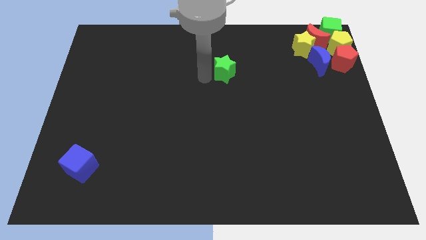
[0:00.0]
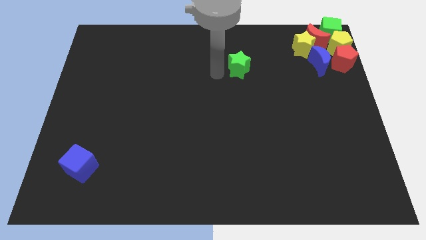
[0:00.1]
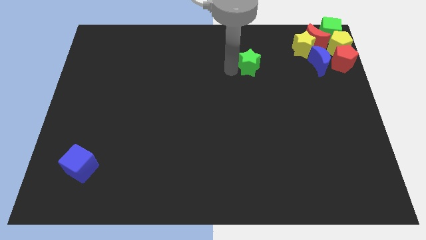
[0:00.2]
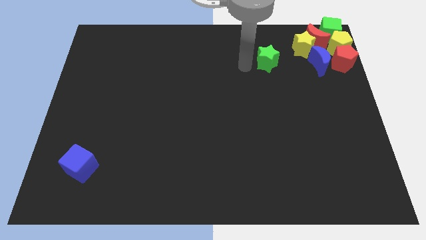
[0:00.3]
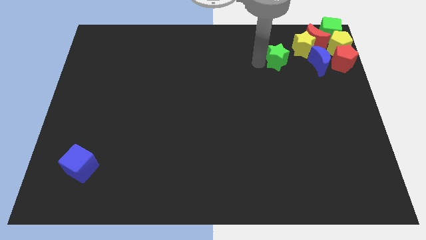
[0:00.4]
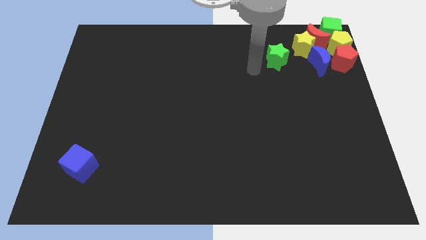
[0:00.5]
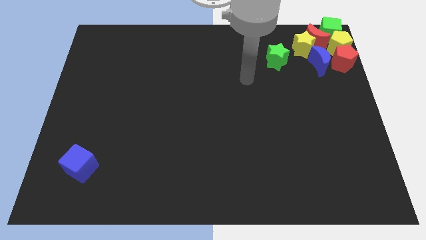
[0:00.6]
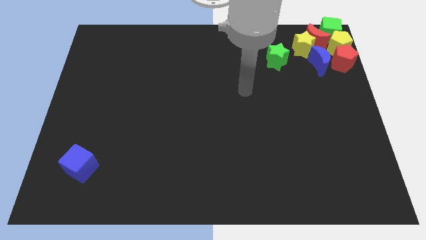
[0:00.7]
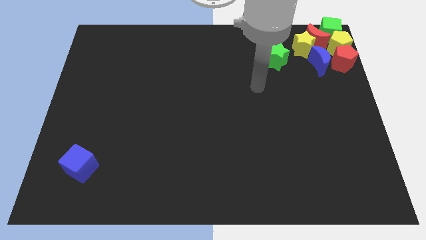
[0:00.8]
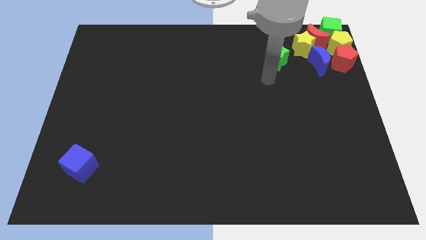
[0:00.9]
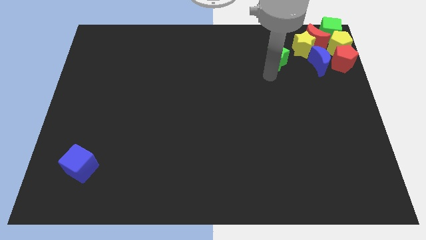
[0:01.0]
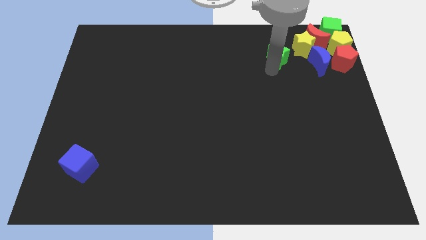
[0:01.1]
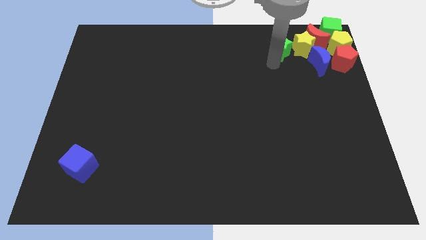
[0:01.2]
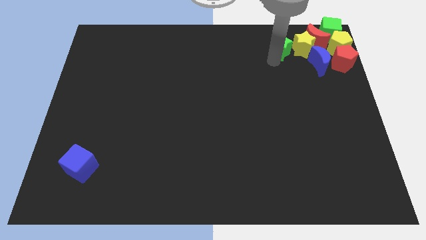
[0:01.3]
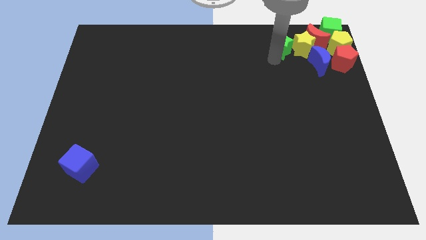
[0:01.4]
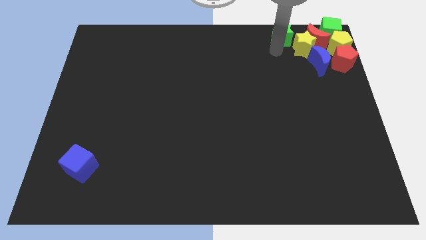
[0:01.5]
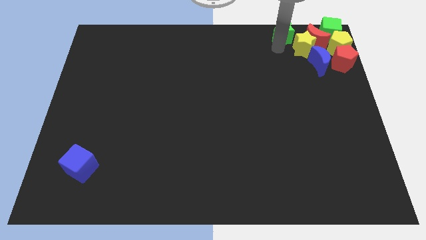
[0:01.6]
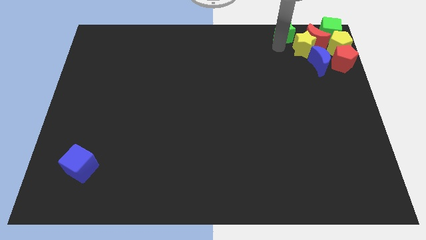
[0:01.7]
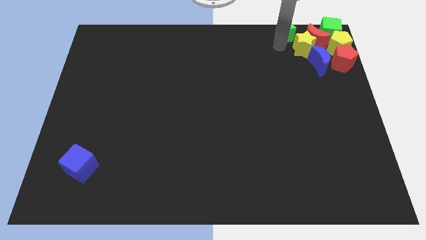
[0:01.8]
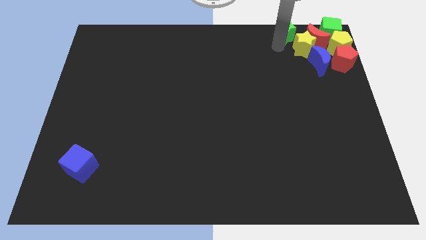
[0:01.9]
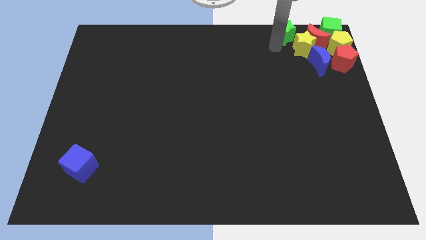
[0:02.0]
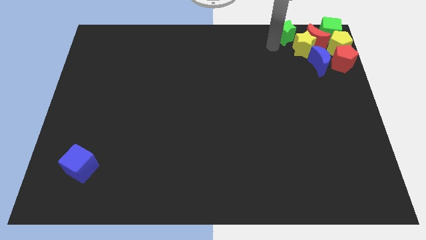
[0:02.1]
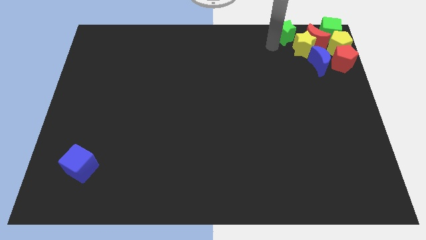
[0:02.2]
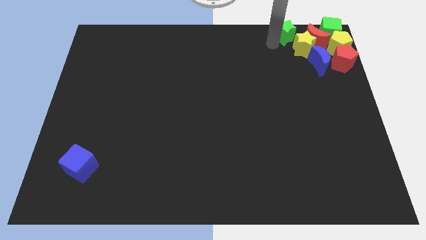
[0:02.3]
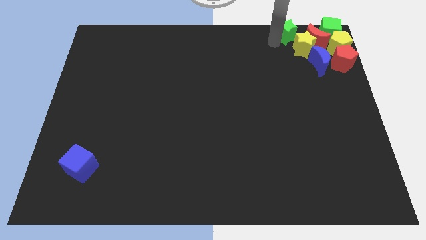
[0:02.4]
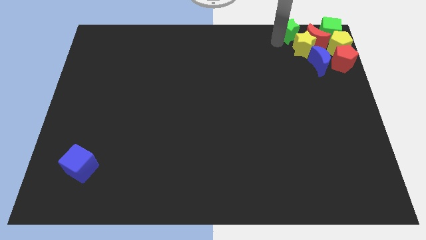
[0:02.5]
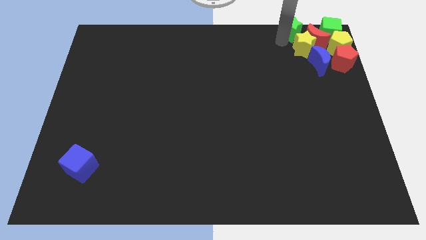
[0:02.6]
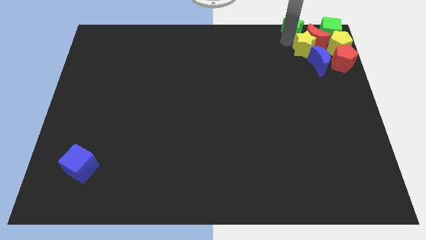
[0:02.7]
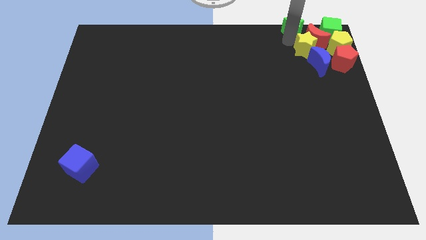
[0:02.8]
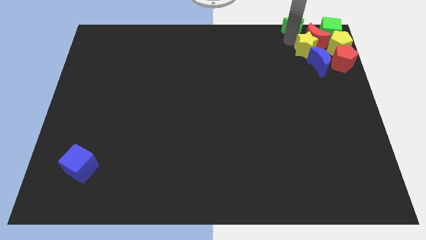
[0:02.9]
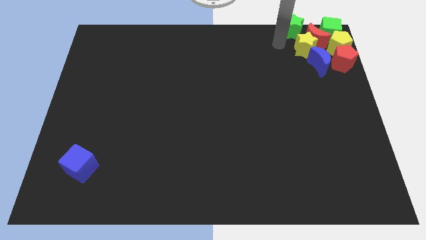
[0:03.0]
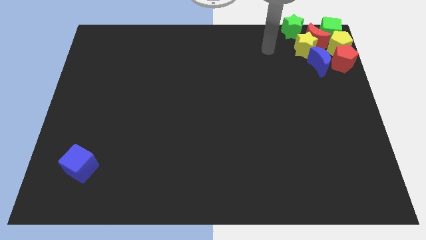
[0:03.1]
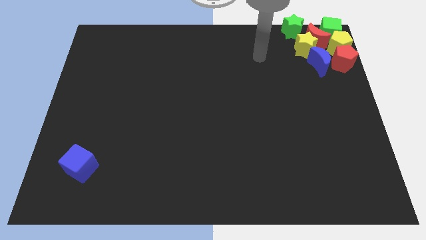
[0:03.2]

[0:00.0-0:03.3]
move the green star parallel left to the green cube

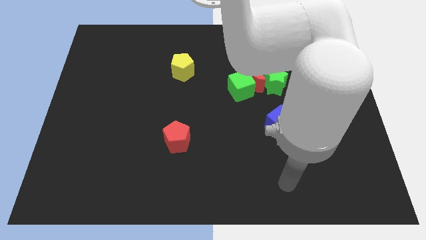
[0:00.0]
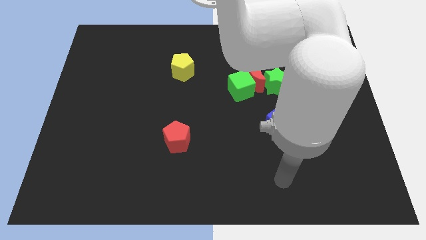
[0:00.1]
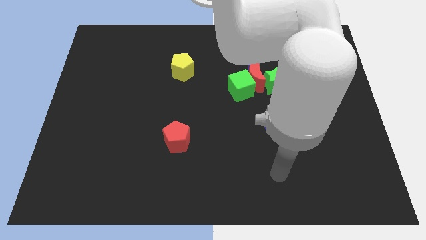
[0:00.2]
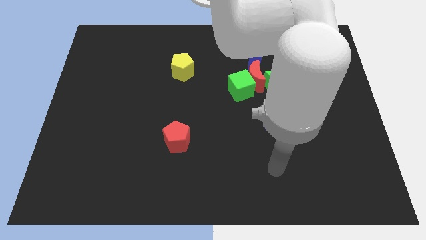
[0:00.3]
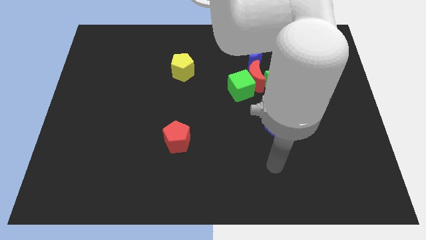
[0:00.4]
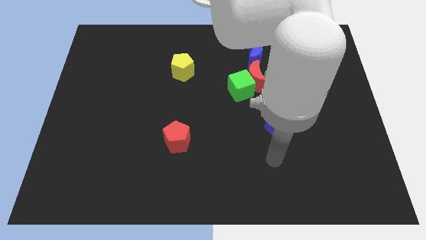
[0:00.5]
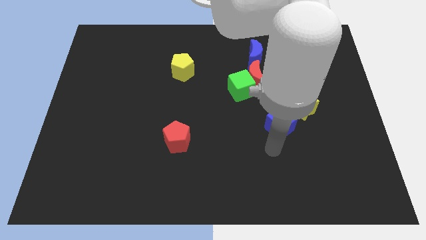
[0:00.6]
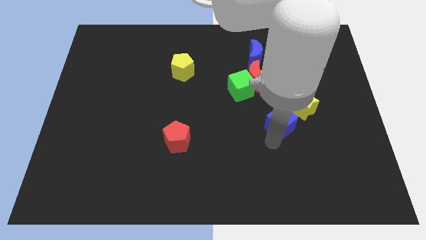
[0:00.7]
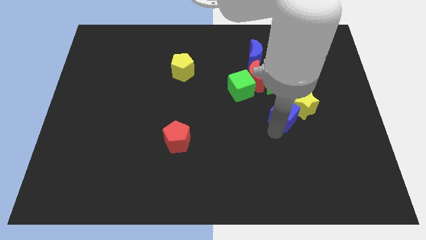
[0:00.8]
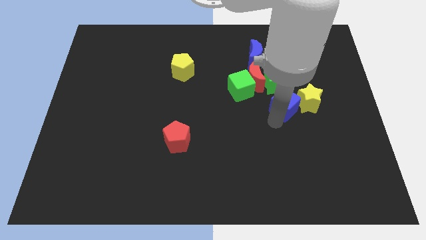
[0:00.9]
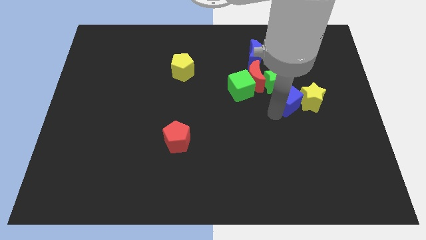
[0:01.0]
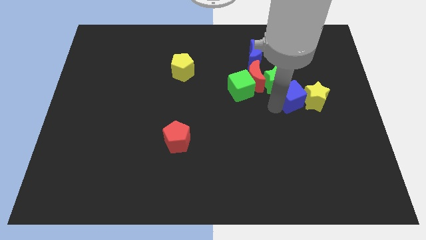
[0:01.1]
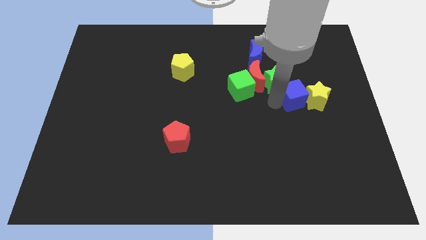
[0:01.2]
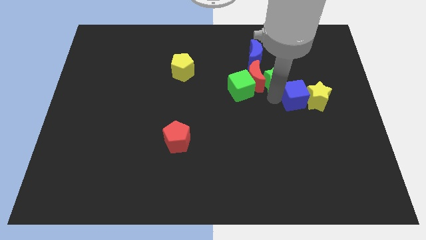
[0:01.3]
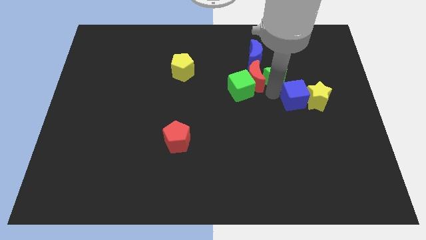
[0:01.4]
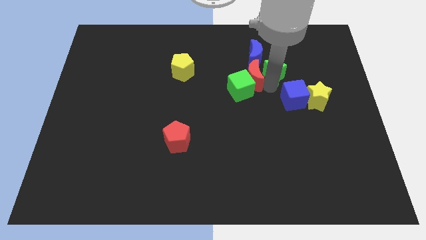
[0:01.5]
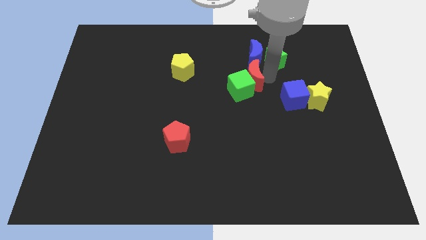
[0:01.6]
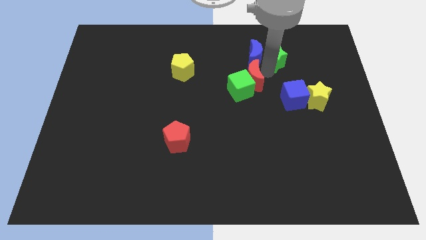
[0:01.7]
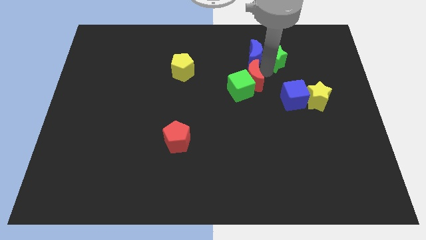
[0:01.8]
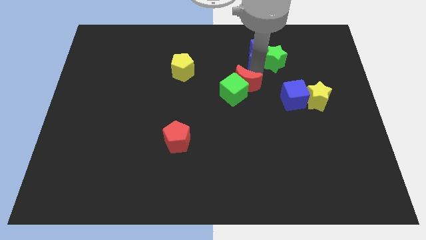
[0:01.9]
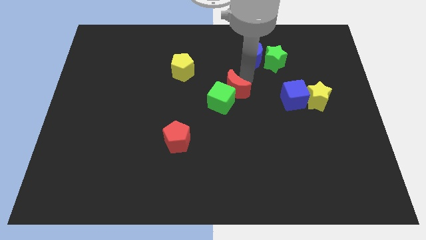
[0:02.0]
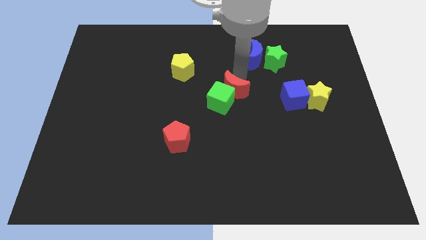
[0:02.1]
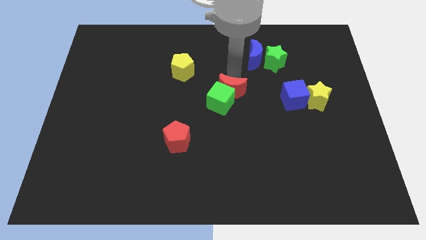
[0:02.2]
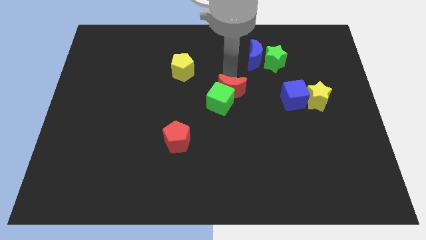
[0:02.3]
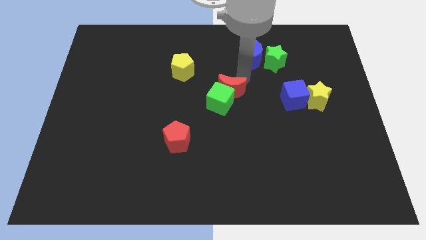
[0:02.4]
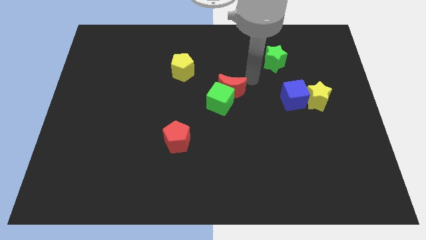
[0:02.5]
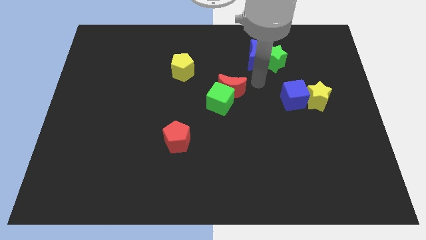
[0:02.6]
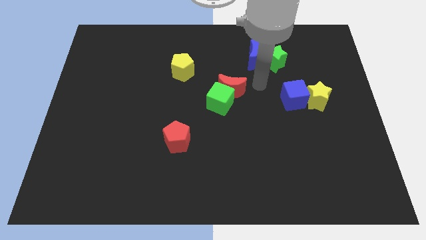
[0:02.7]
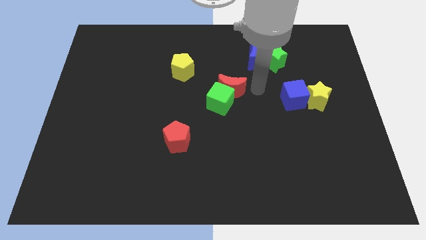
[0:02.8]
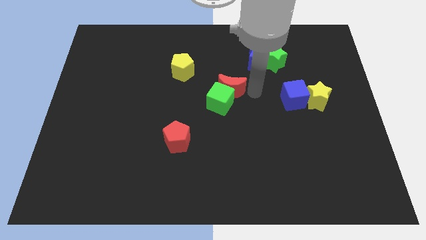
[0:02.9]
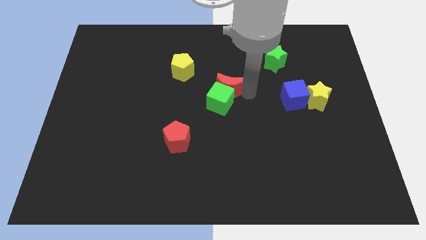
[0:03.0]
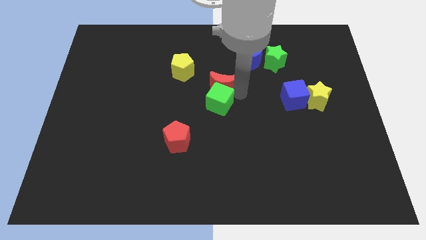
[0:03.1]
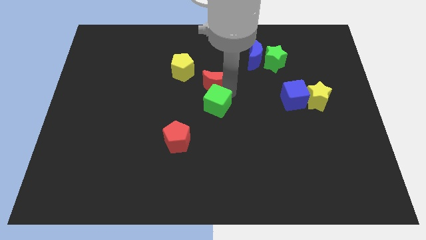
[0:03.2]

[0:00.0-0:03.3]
push the blue cube green star and the red crescent in different directions

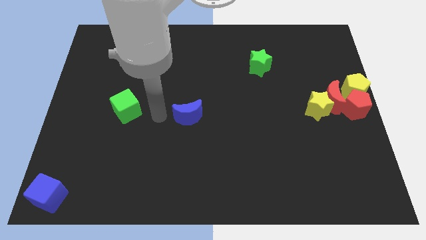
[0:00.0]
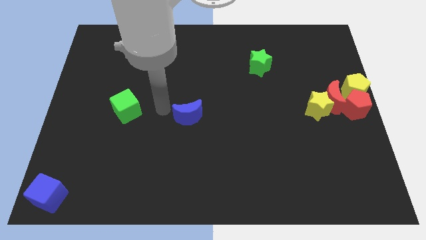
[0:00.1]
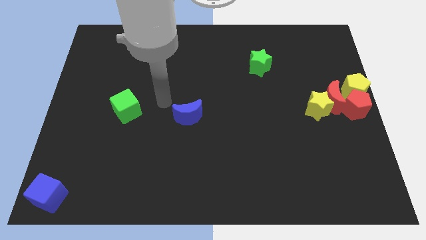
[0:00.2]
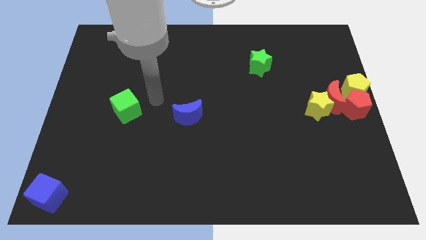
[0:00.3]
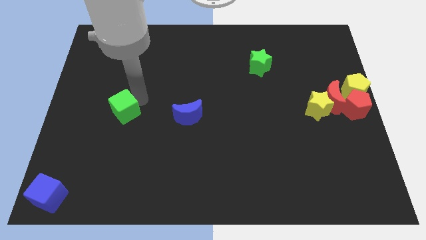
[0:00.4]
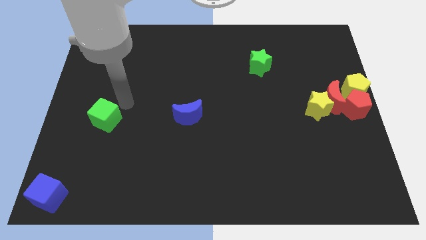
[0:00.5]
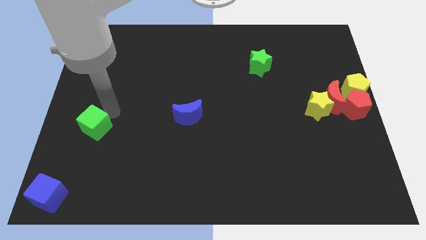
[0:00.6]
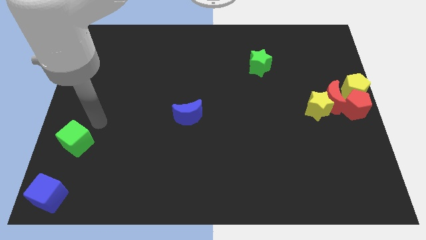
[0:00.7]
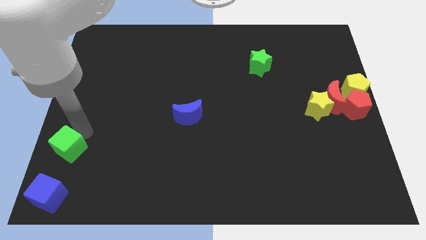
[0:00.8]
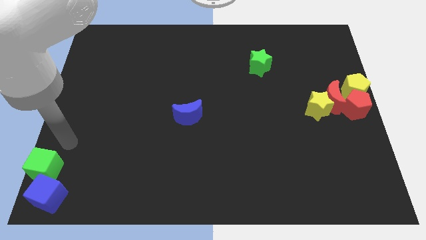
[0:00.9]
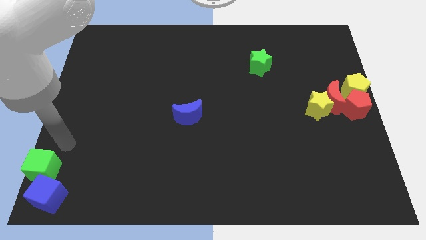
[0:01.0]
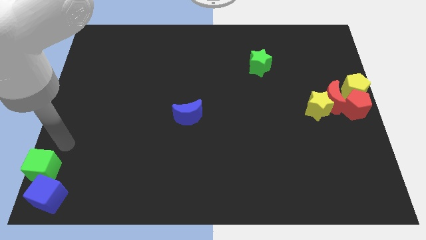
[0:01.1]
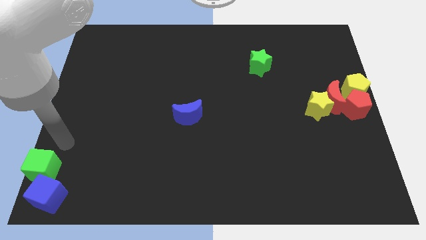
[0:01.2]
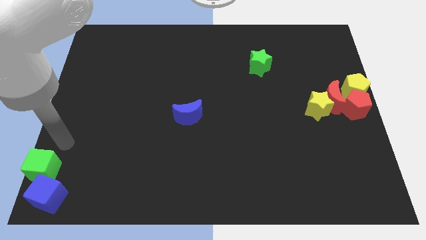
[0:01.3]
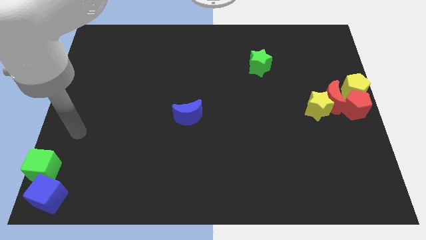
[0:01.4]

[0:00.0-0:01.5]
move the green cube into the blue cube

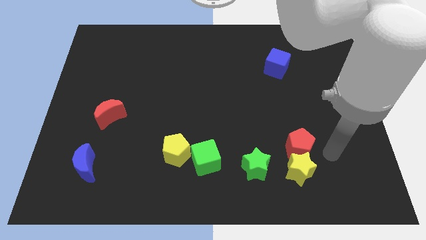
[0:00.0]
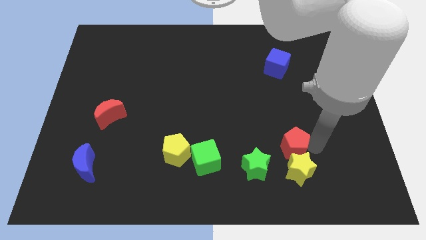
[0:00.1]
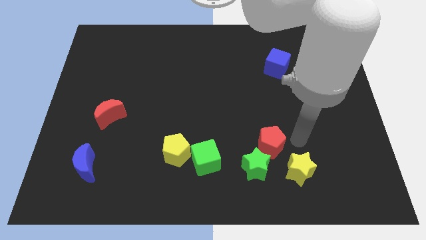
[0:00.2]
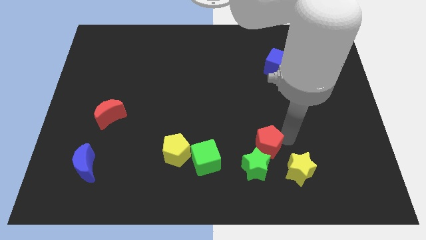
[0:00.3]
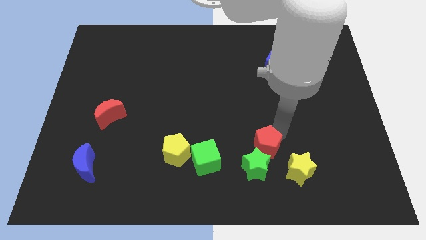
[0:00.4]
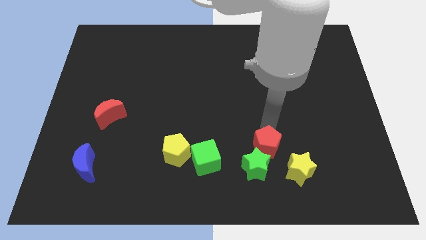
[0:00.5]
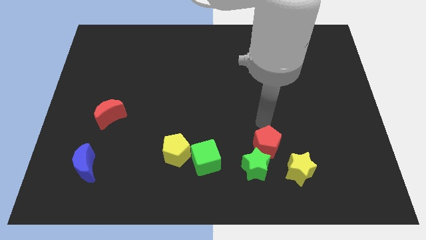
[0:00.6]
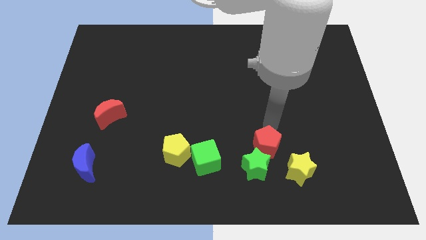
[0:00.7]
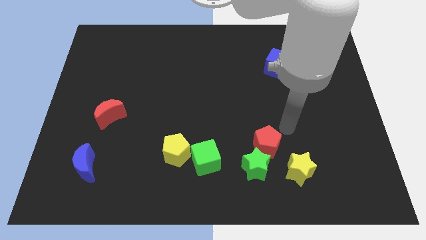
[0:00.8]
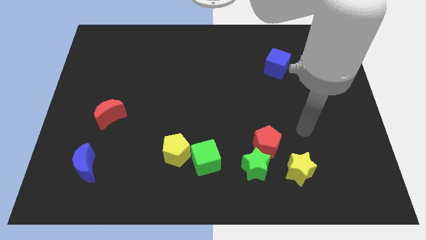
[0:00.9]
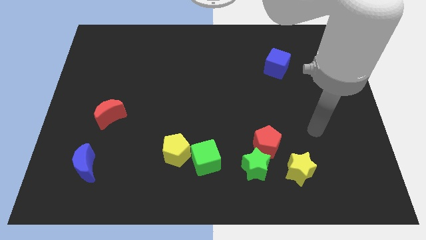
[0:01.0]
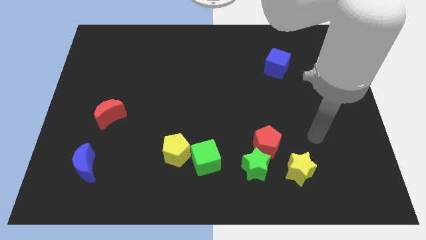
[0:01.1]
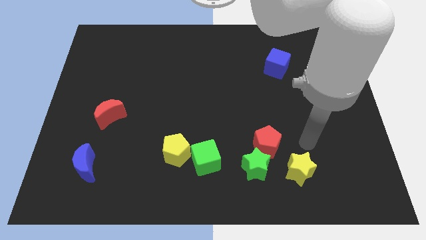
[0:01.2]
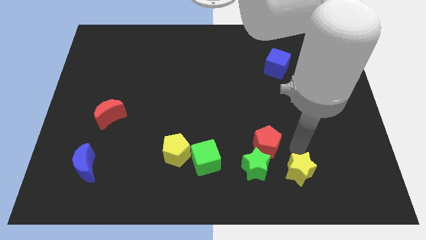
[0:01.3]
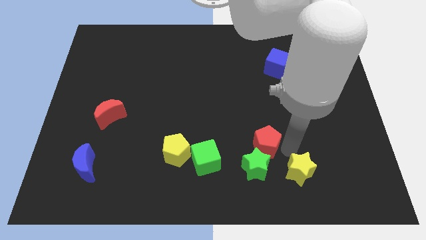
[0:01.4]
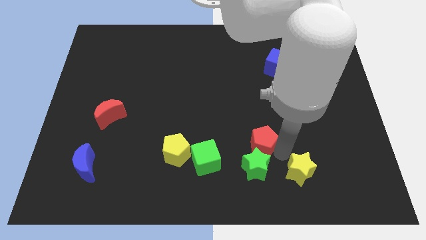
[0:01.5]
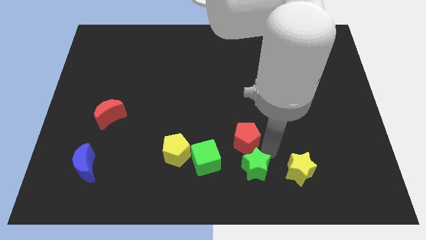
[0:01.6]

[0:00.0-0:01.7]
move the red pentagon to the top of the green star
